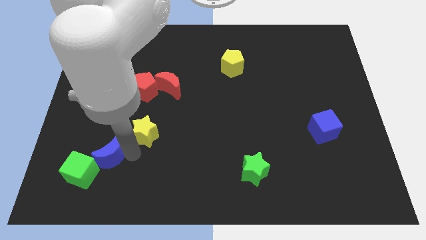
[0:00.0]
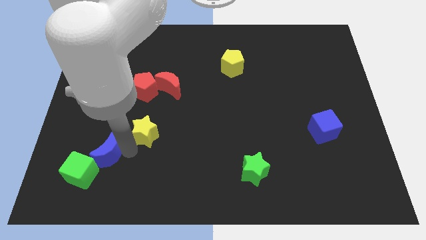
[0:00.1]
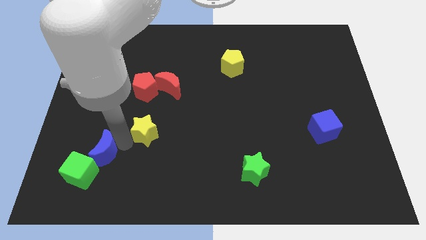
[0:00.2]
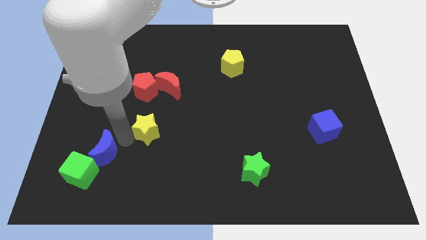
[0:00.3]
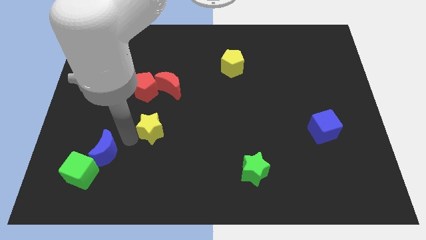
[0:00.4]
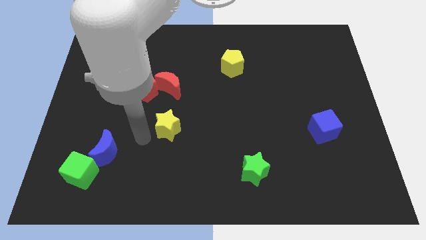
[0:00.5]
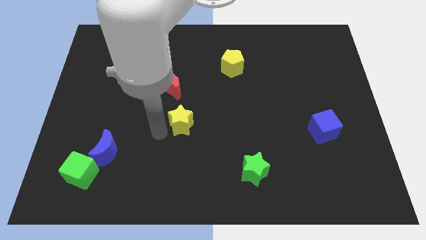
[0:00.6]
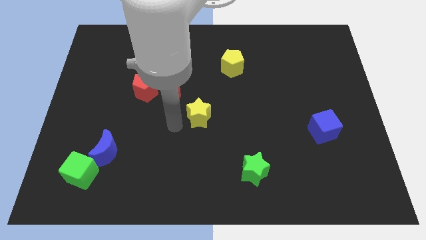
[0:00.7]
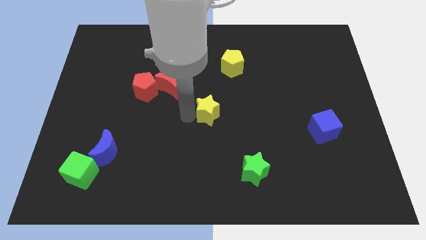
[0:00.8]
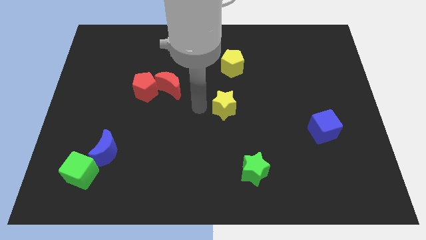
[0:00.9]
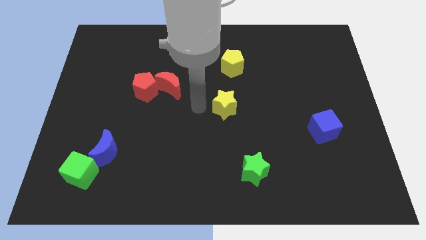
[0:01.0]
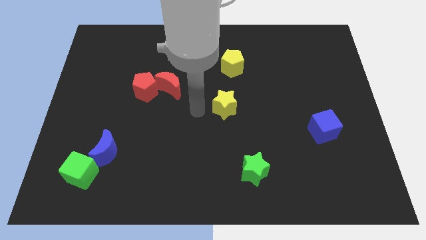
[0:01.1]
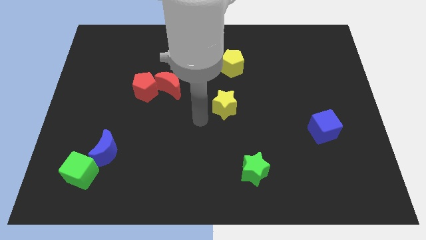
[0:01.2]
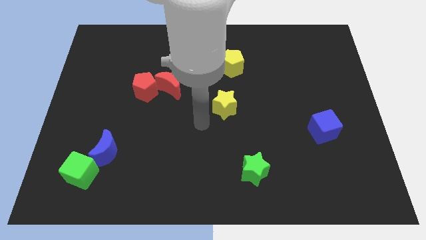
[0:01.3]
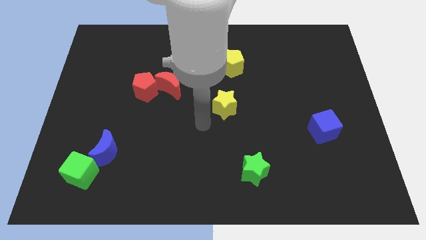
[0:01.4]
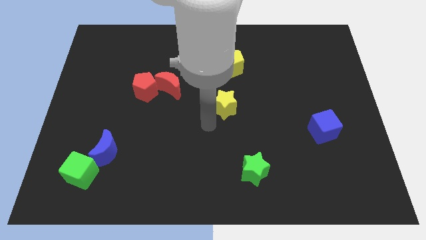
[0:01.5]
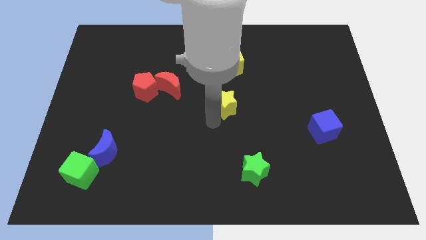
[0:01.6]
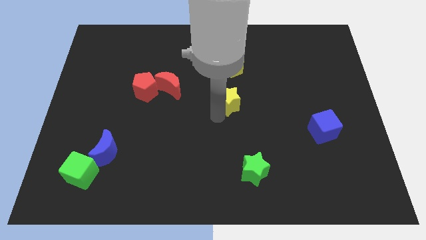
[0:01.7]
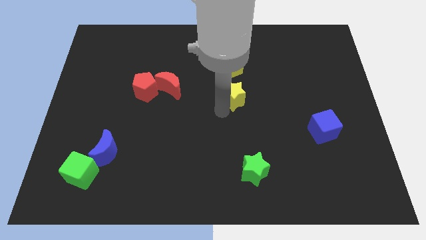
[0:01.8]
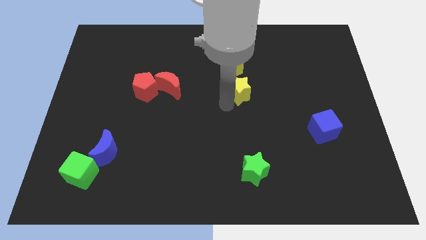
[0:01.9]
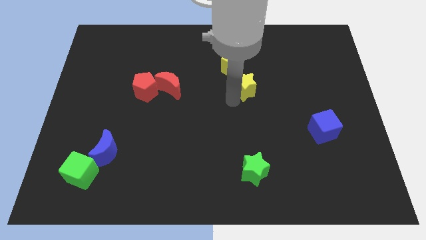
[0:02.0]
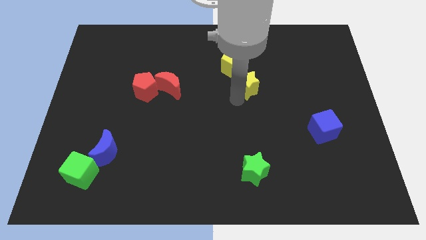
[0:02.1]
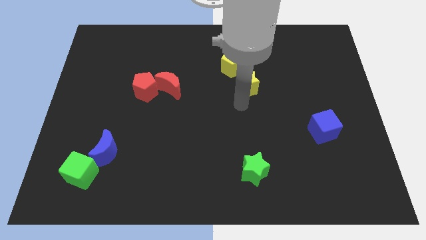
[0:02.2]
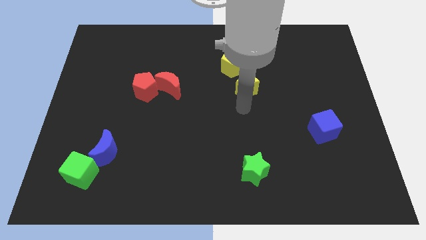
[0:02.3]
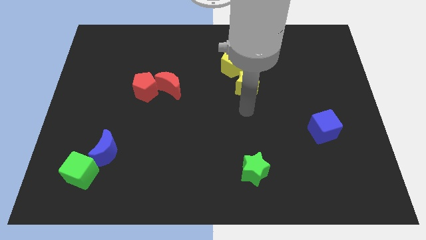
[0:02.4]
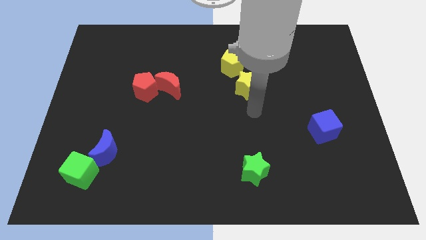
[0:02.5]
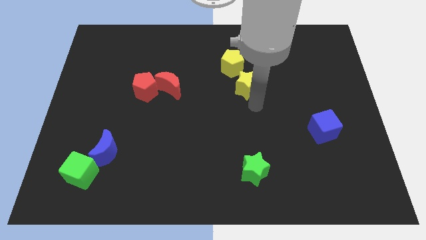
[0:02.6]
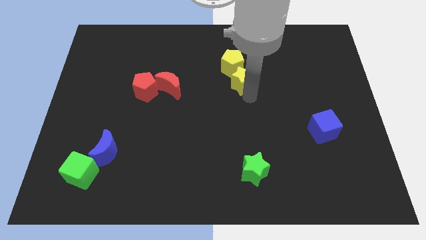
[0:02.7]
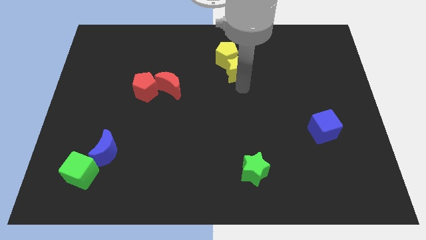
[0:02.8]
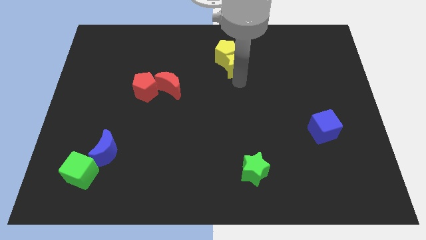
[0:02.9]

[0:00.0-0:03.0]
move the yellow star towards the yellow pentagon

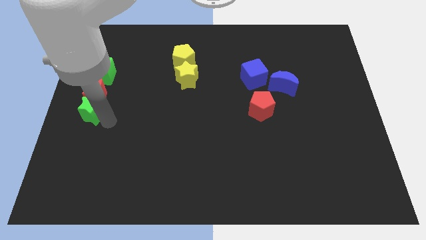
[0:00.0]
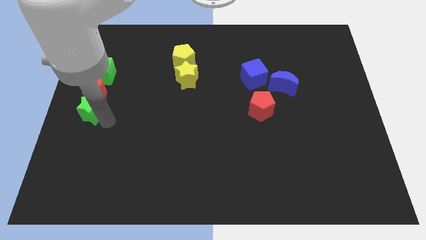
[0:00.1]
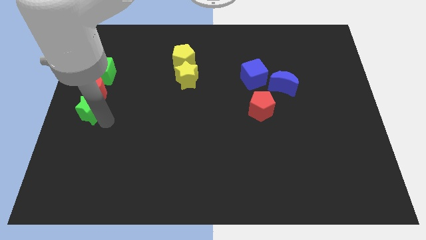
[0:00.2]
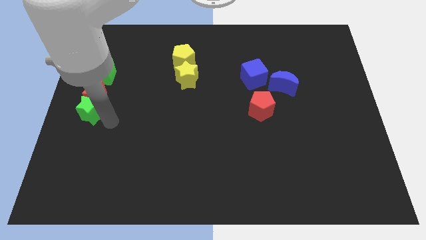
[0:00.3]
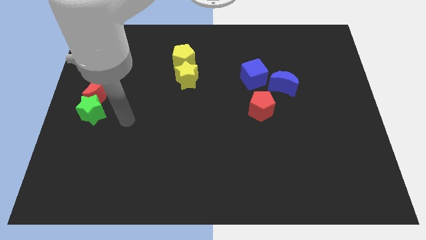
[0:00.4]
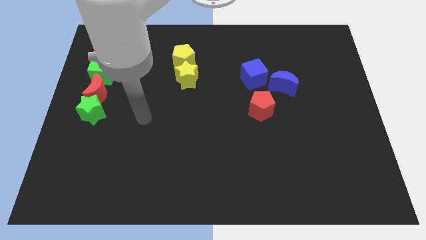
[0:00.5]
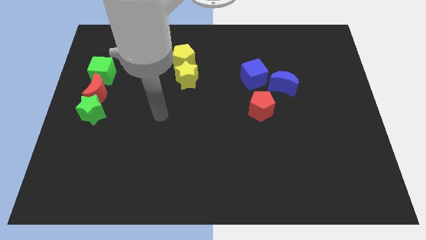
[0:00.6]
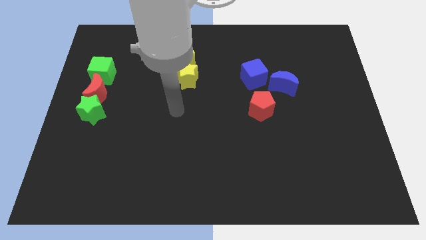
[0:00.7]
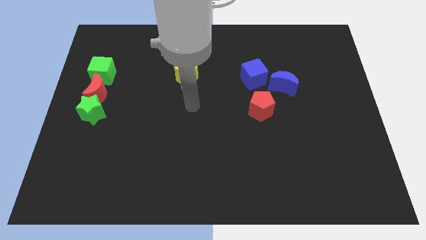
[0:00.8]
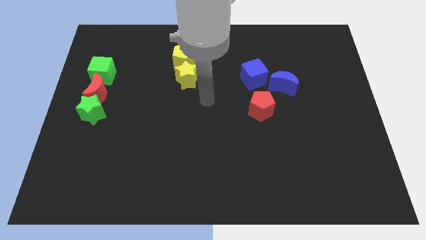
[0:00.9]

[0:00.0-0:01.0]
place arm in the center

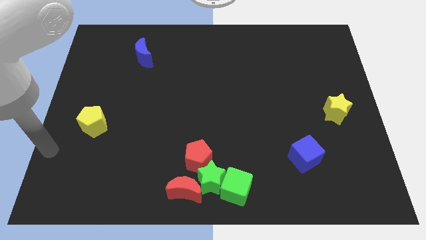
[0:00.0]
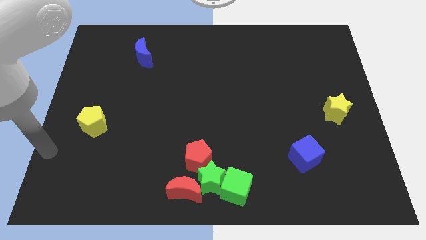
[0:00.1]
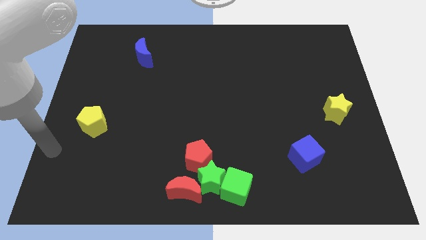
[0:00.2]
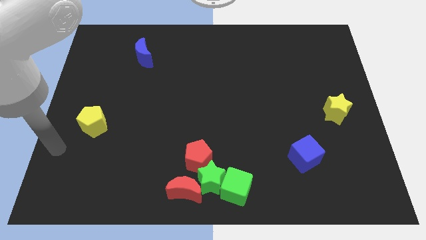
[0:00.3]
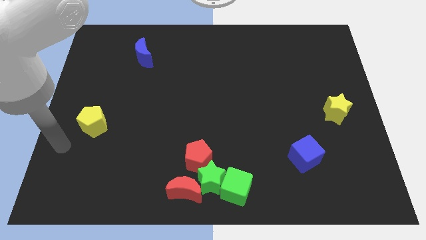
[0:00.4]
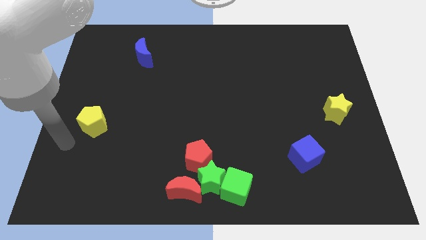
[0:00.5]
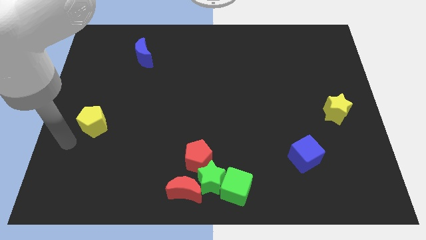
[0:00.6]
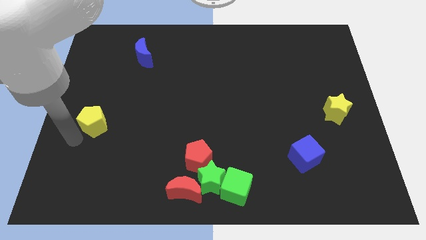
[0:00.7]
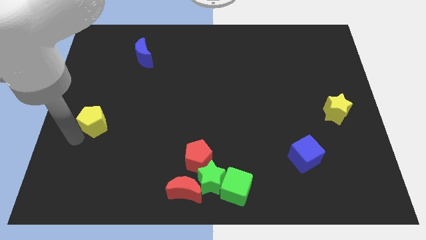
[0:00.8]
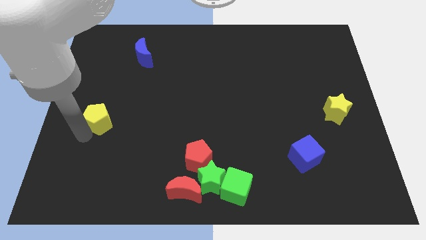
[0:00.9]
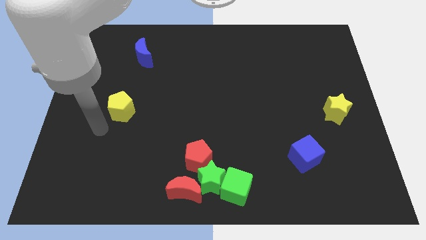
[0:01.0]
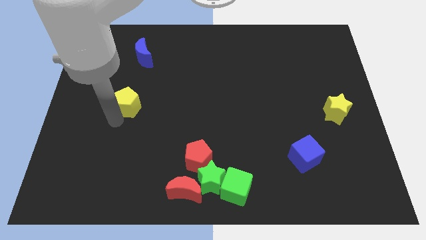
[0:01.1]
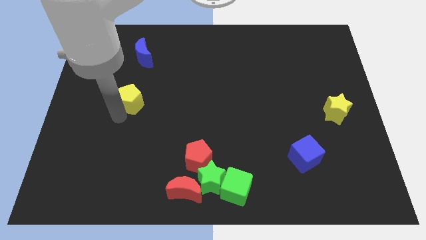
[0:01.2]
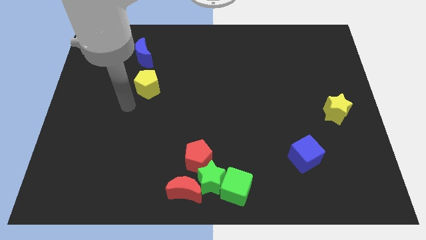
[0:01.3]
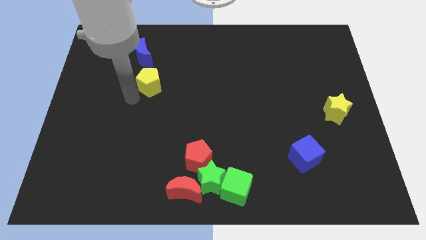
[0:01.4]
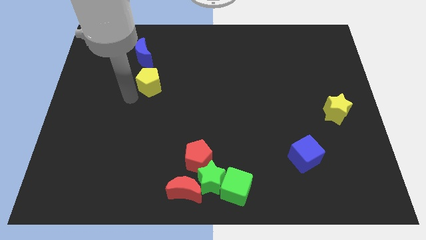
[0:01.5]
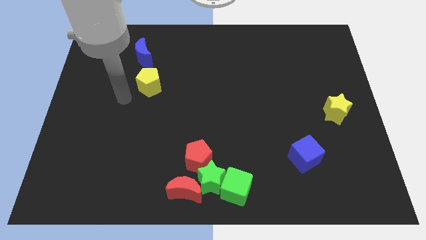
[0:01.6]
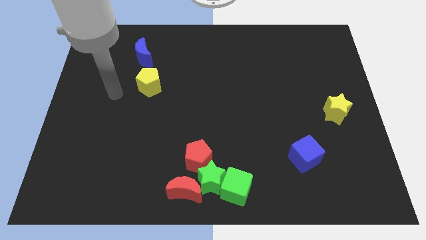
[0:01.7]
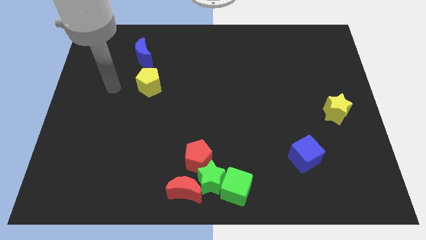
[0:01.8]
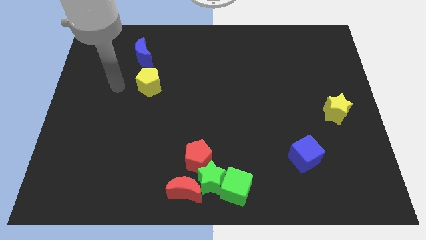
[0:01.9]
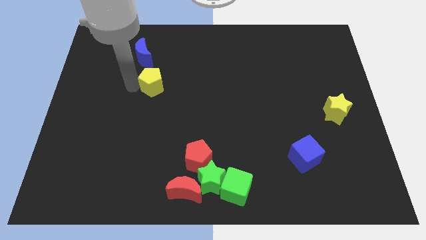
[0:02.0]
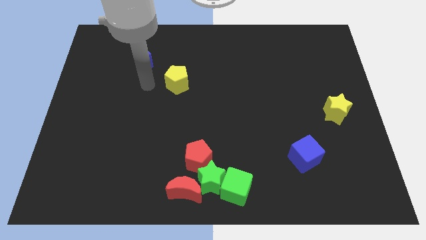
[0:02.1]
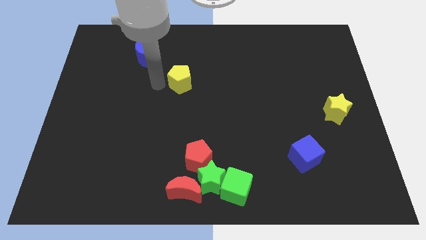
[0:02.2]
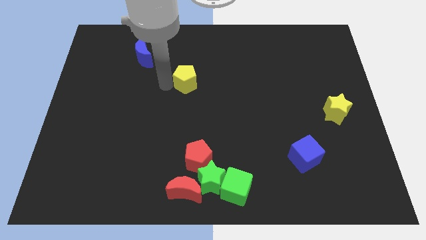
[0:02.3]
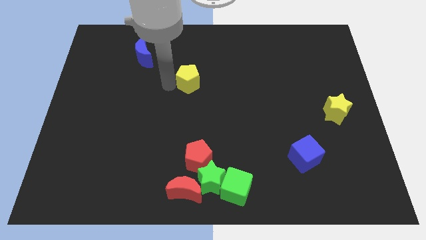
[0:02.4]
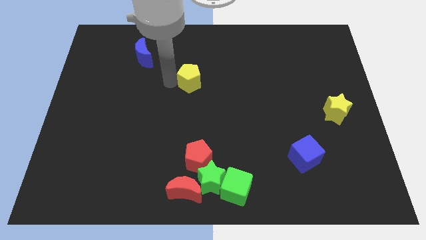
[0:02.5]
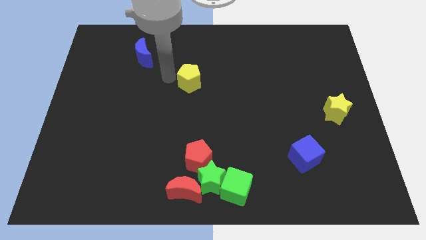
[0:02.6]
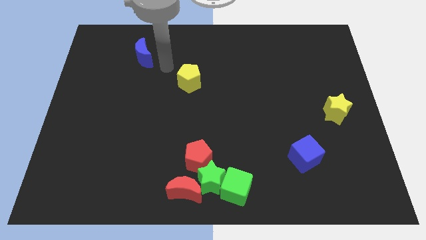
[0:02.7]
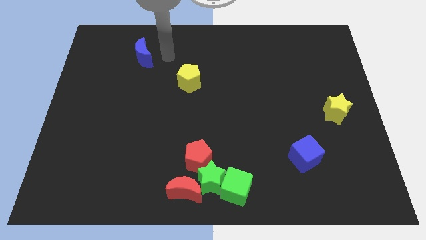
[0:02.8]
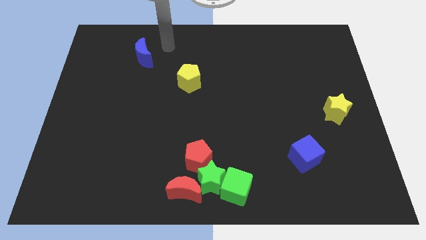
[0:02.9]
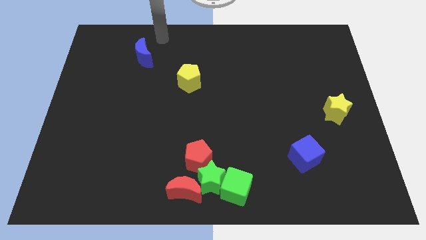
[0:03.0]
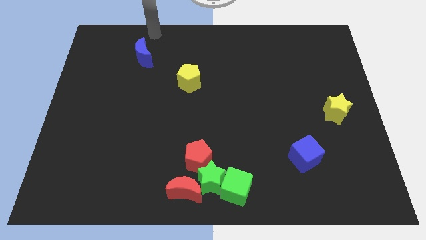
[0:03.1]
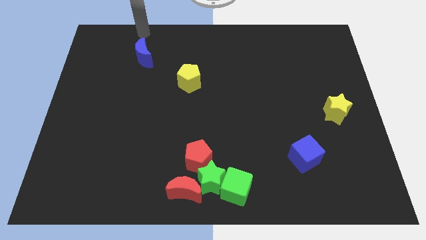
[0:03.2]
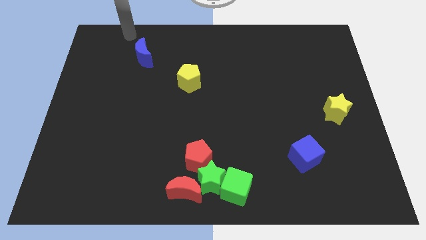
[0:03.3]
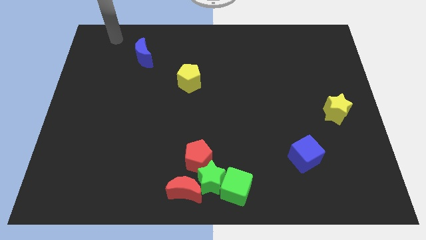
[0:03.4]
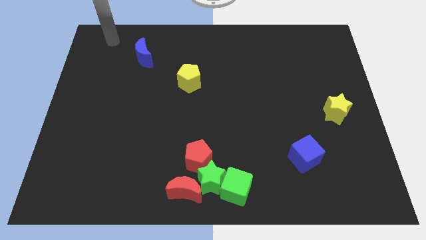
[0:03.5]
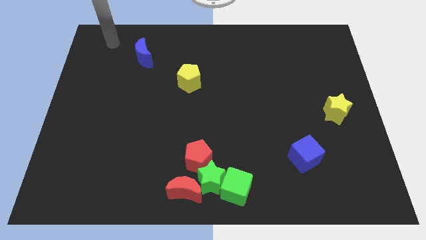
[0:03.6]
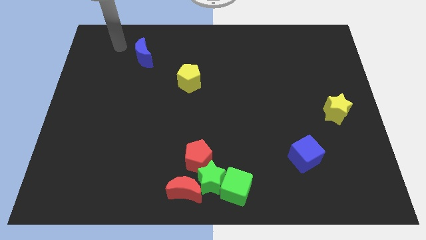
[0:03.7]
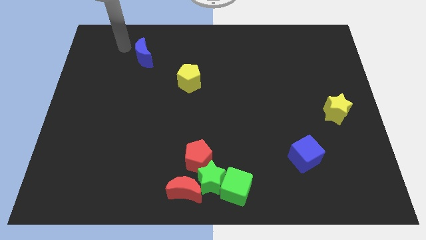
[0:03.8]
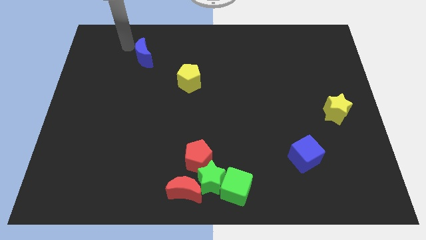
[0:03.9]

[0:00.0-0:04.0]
push yellow pentagon vertically above red pentagon

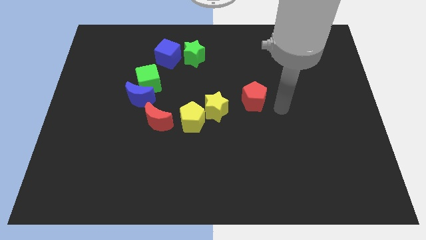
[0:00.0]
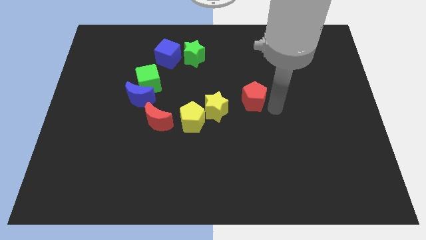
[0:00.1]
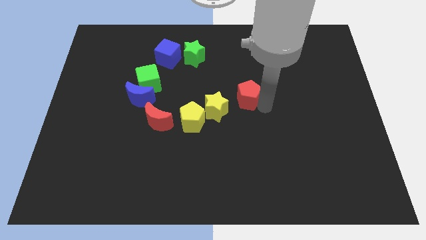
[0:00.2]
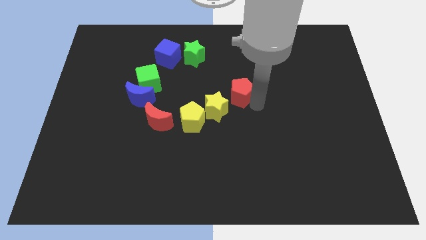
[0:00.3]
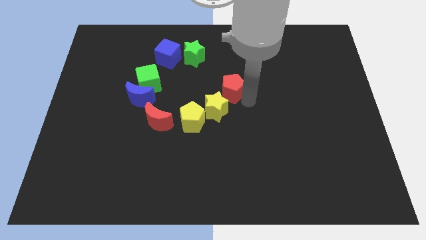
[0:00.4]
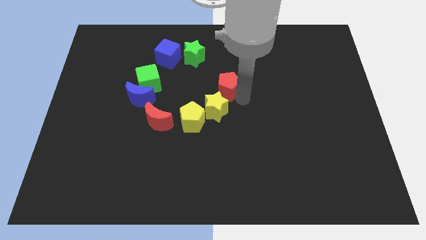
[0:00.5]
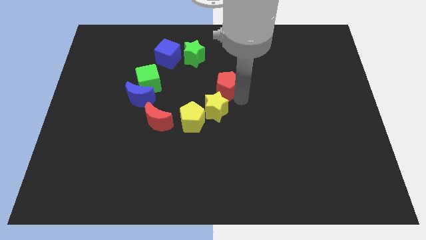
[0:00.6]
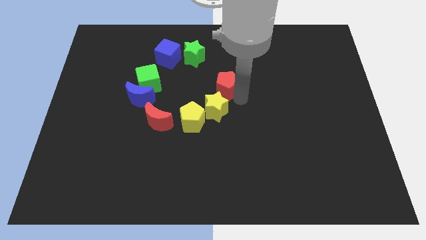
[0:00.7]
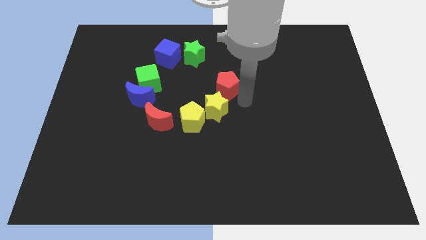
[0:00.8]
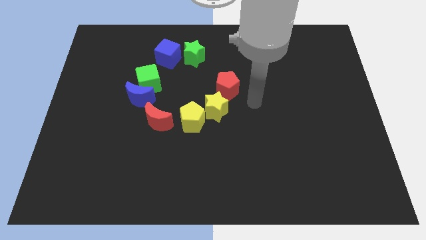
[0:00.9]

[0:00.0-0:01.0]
place the red pentagon above the yellow star
